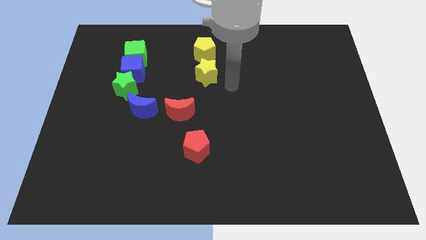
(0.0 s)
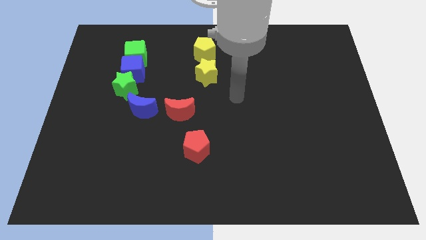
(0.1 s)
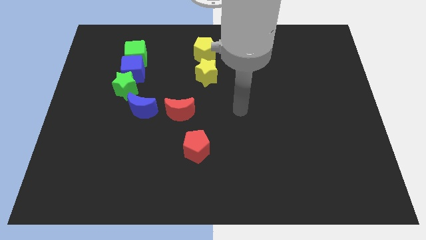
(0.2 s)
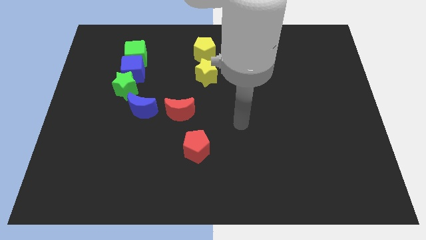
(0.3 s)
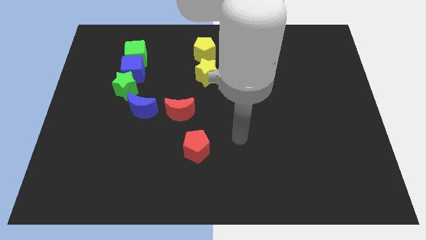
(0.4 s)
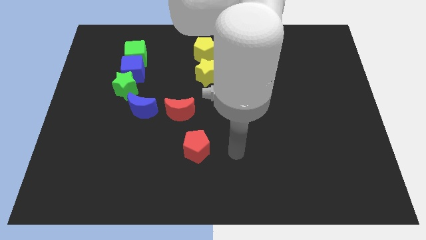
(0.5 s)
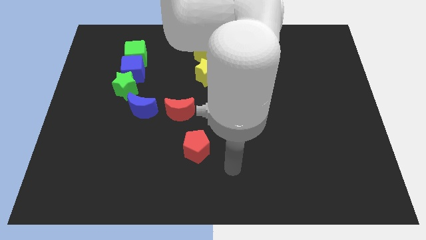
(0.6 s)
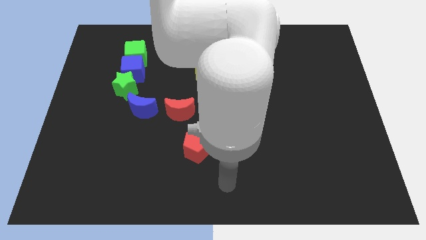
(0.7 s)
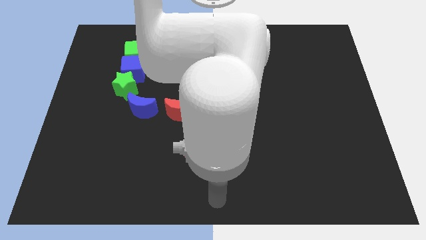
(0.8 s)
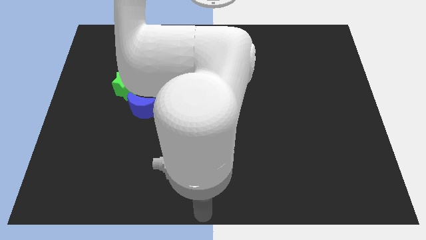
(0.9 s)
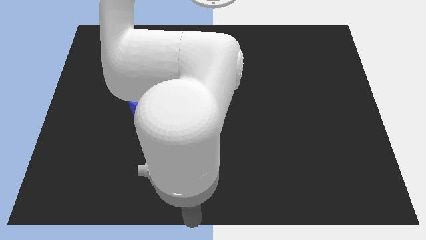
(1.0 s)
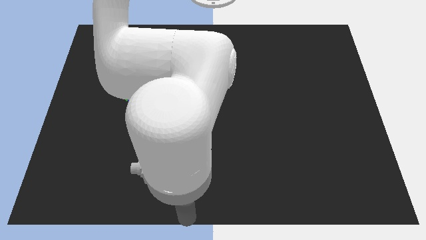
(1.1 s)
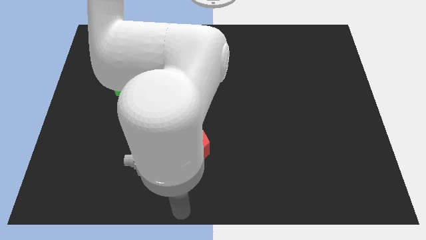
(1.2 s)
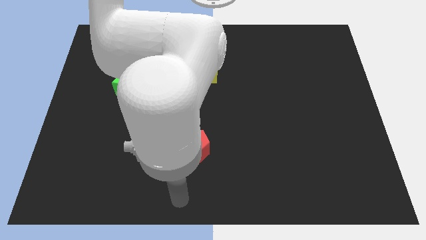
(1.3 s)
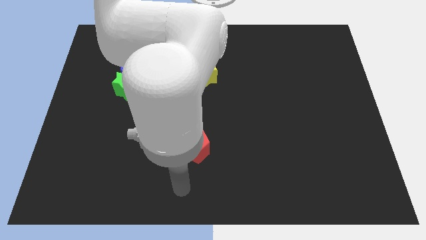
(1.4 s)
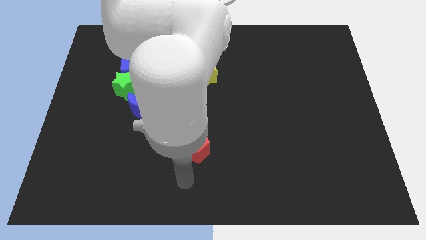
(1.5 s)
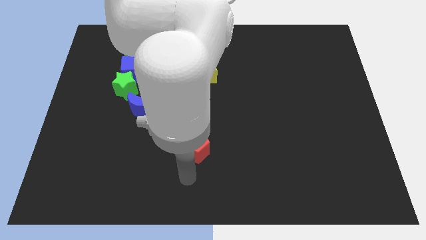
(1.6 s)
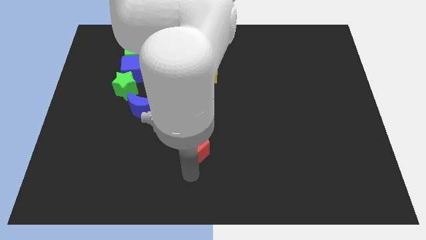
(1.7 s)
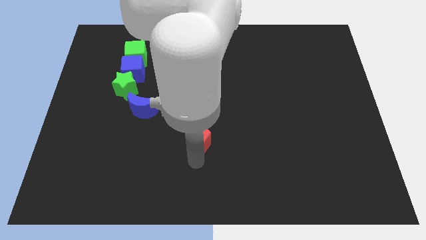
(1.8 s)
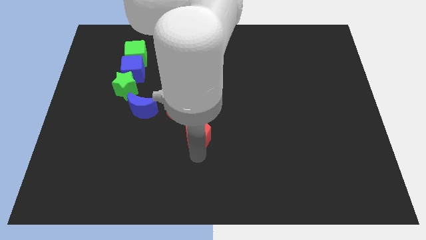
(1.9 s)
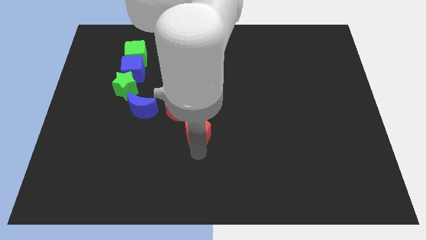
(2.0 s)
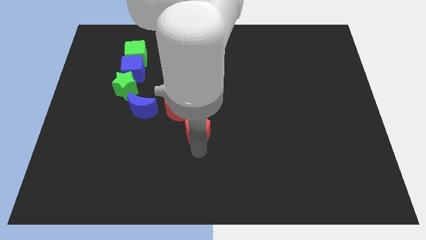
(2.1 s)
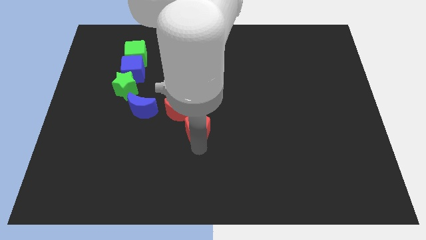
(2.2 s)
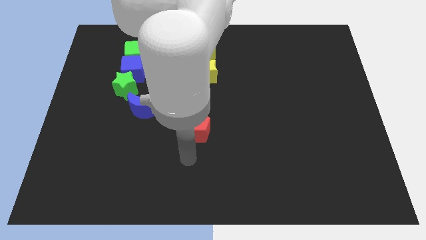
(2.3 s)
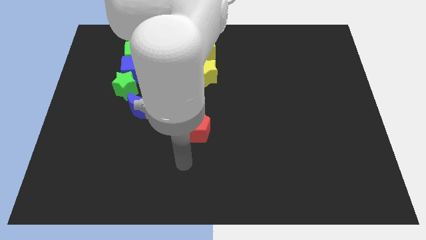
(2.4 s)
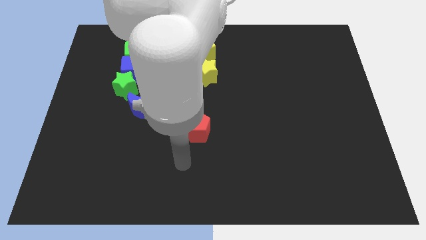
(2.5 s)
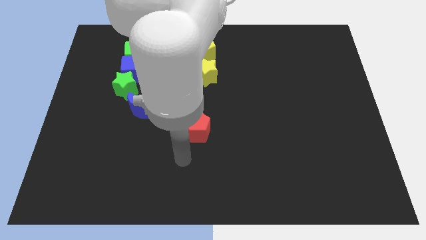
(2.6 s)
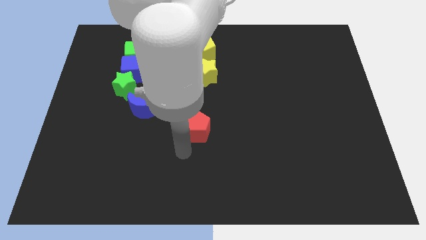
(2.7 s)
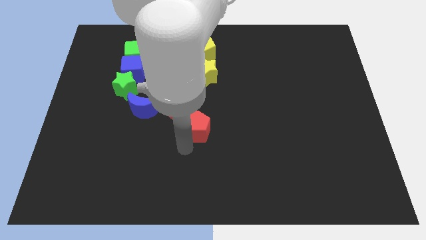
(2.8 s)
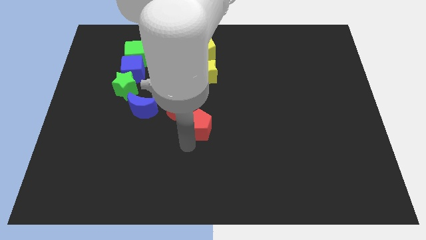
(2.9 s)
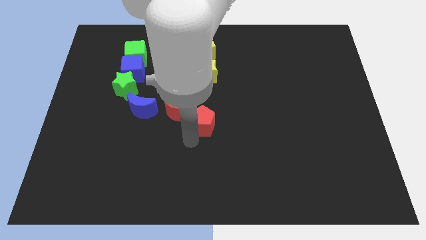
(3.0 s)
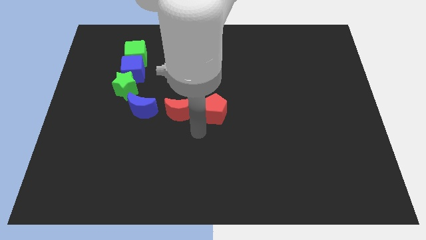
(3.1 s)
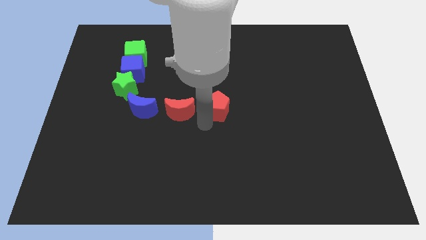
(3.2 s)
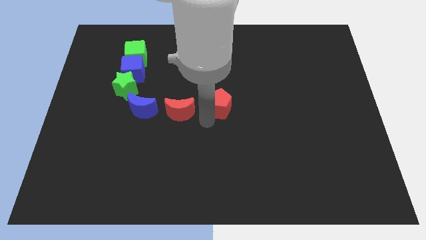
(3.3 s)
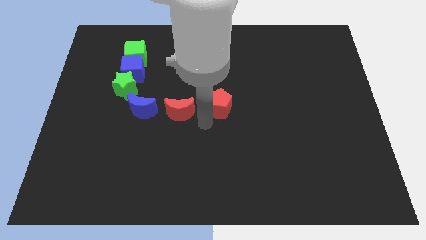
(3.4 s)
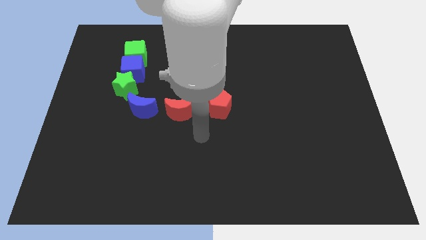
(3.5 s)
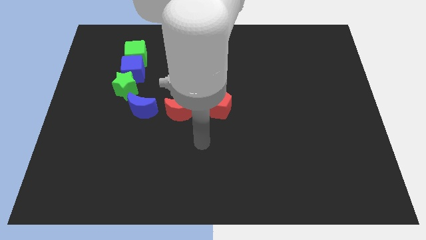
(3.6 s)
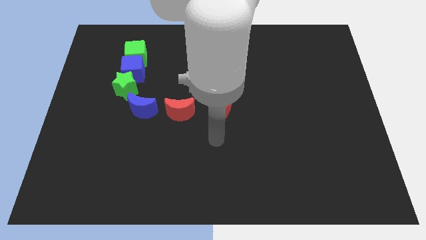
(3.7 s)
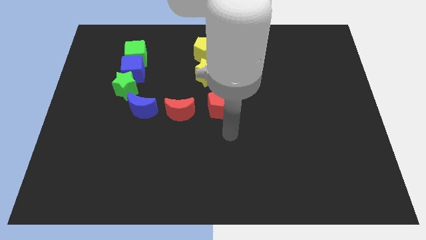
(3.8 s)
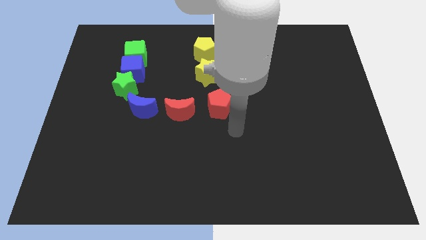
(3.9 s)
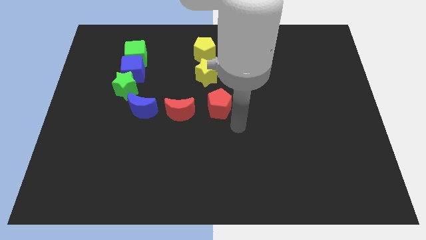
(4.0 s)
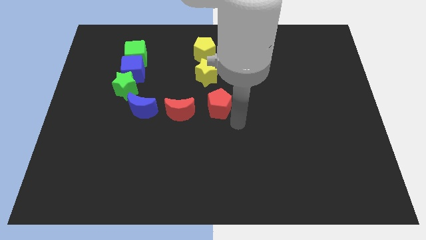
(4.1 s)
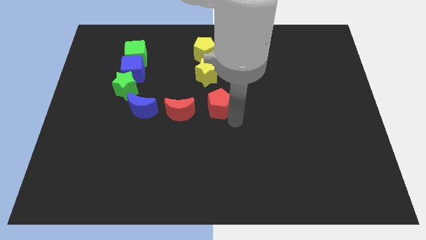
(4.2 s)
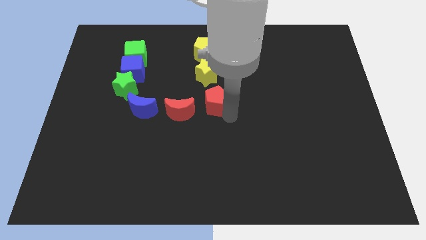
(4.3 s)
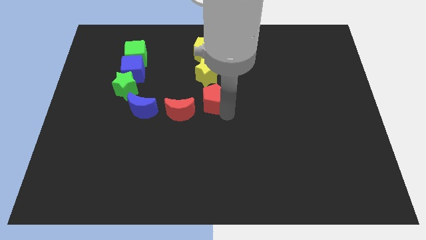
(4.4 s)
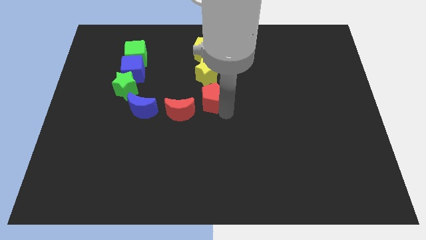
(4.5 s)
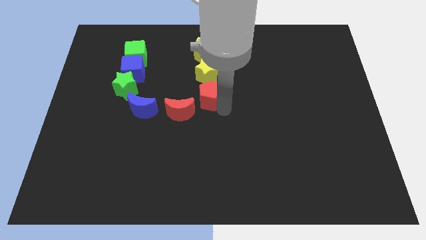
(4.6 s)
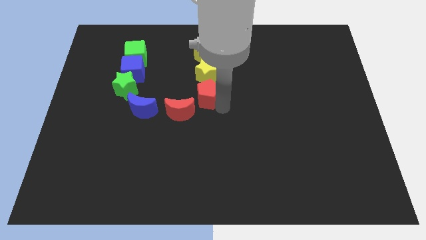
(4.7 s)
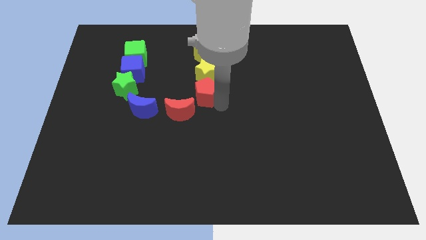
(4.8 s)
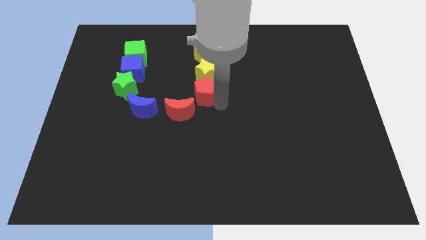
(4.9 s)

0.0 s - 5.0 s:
place the red pentagon below the yellow star

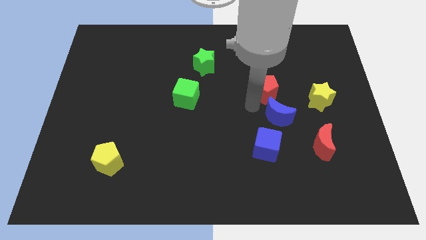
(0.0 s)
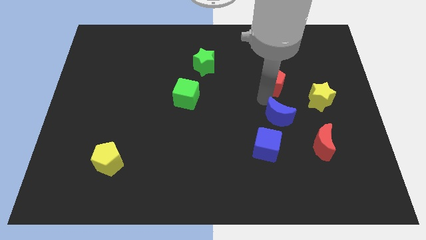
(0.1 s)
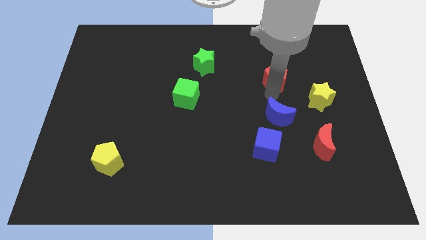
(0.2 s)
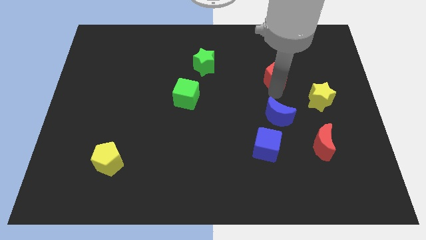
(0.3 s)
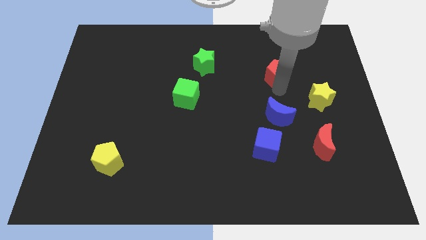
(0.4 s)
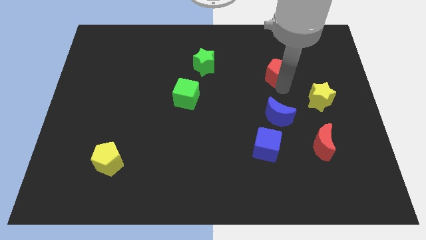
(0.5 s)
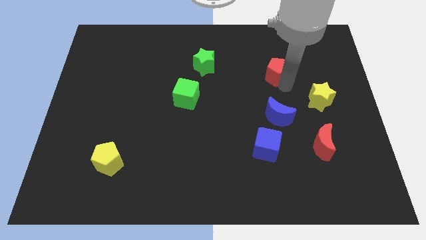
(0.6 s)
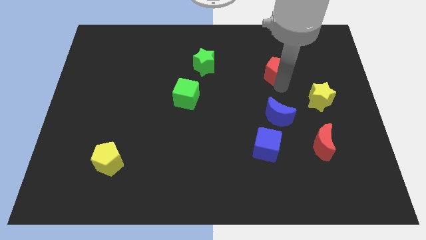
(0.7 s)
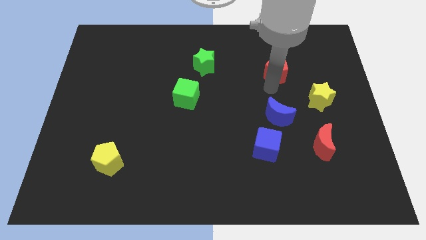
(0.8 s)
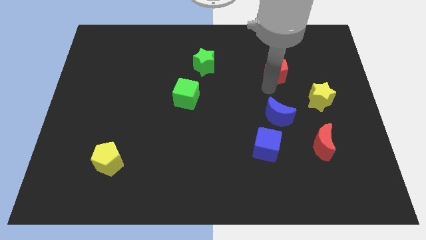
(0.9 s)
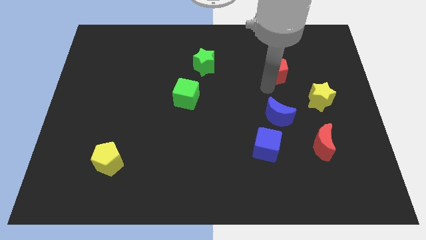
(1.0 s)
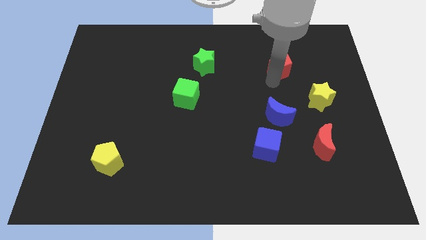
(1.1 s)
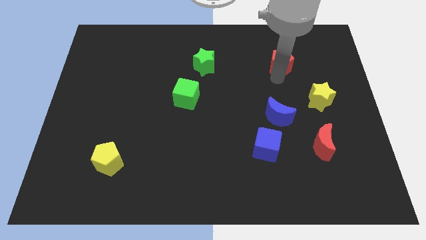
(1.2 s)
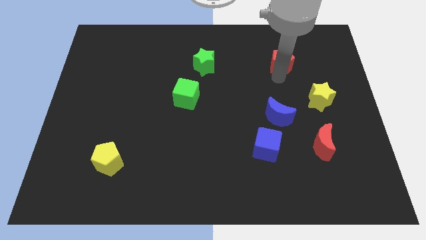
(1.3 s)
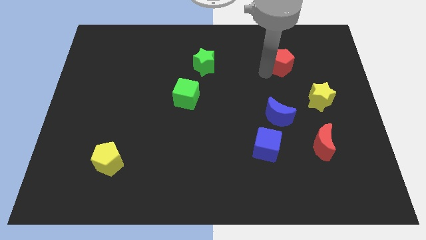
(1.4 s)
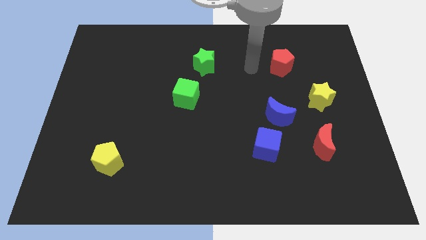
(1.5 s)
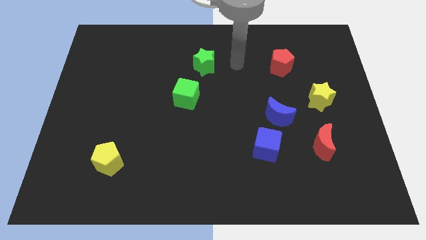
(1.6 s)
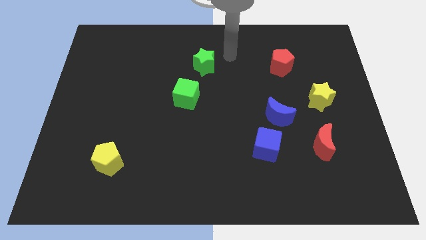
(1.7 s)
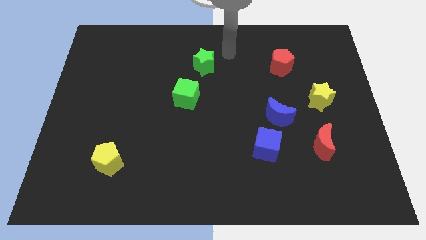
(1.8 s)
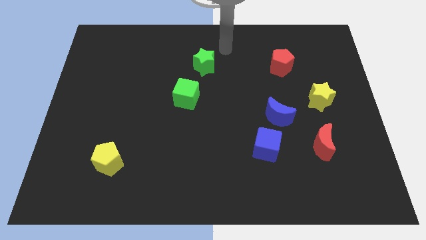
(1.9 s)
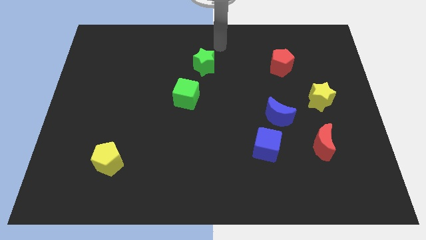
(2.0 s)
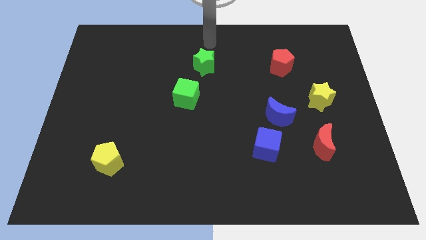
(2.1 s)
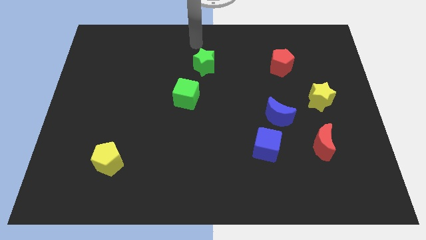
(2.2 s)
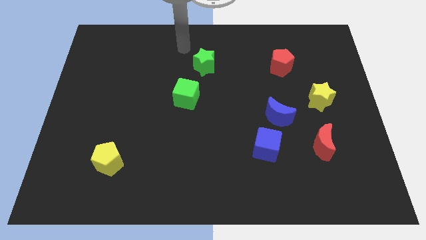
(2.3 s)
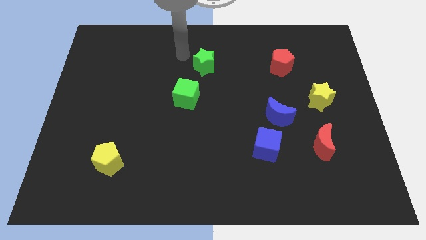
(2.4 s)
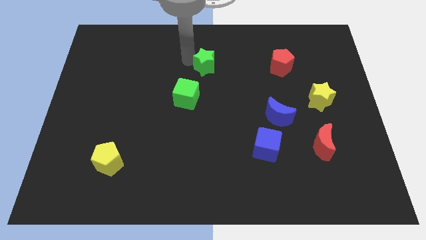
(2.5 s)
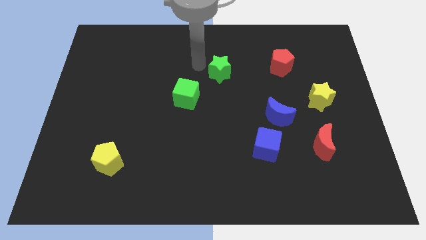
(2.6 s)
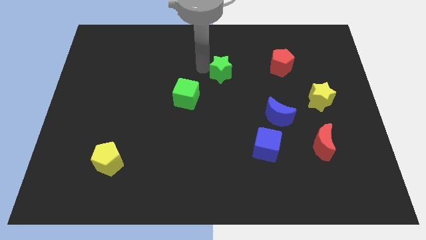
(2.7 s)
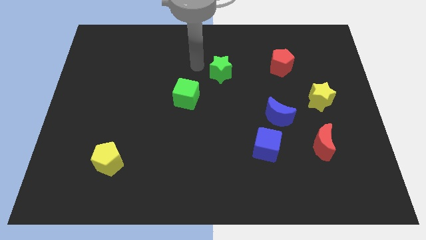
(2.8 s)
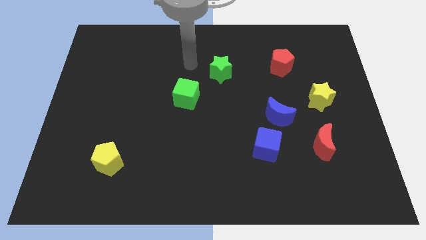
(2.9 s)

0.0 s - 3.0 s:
push the green star slightly towards left

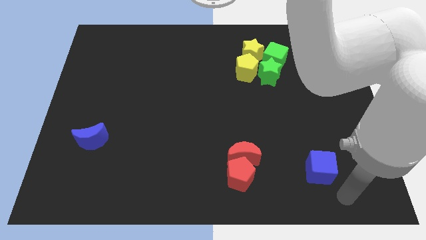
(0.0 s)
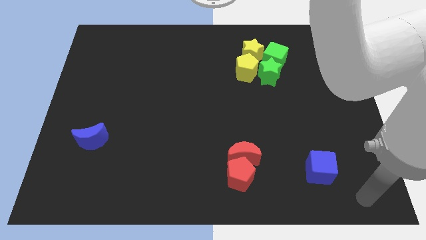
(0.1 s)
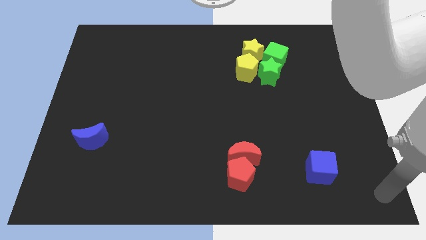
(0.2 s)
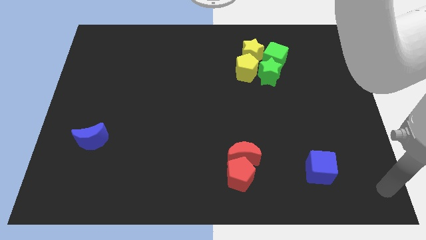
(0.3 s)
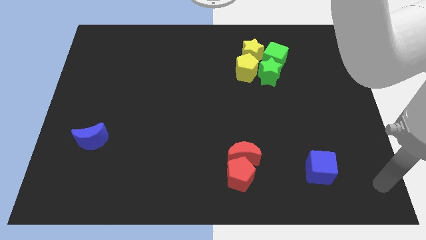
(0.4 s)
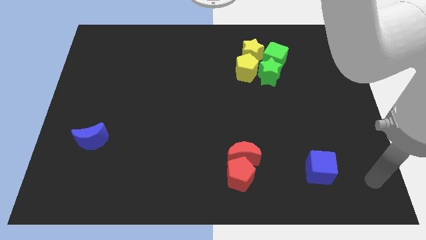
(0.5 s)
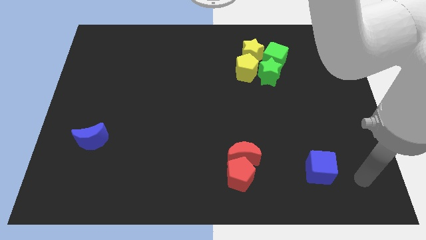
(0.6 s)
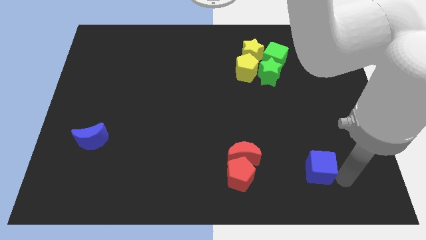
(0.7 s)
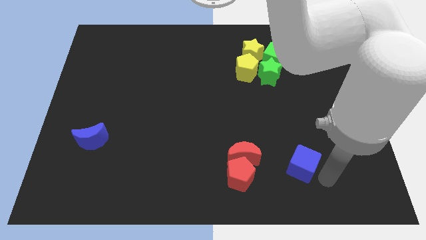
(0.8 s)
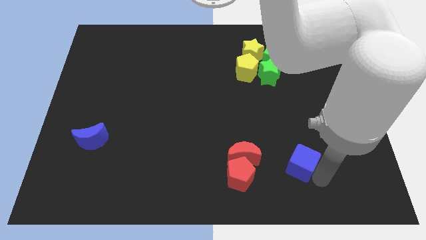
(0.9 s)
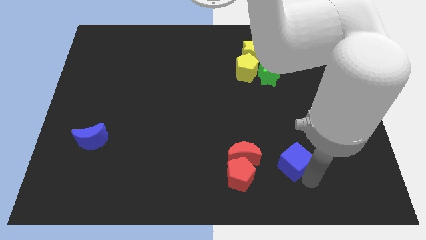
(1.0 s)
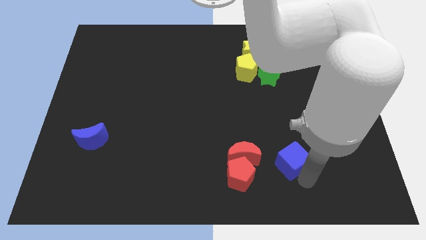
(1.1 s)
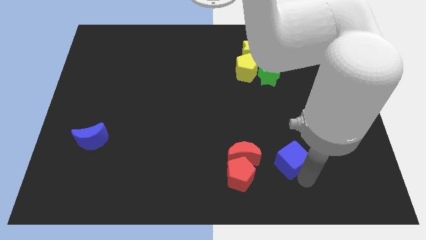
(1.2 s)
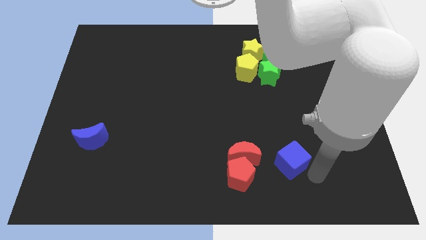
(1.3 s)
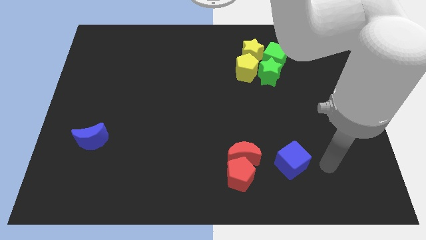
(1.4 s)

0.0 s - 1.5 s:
push the blue cube closer to the red moon
